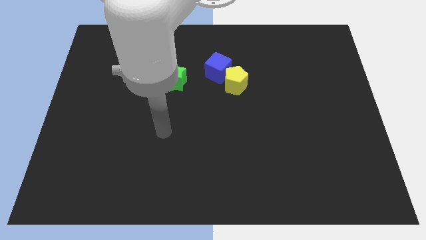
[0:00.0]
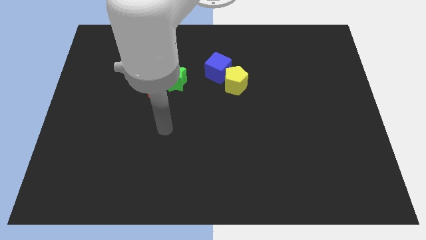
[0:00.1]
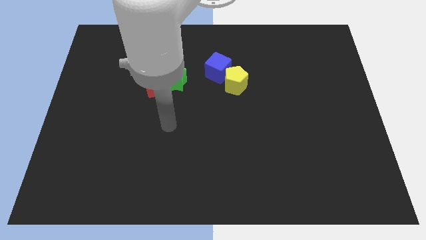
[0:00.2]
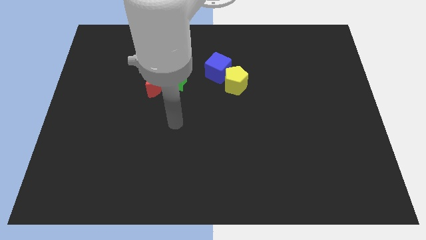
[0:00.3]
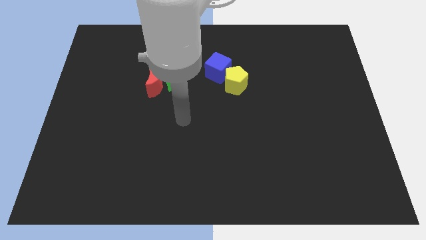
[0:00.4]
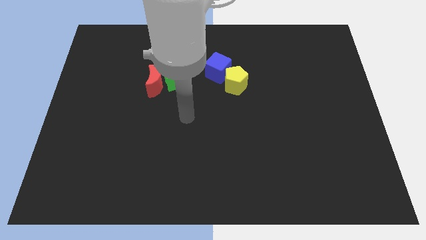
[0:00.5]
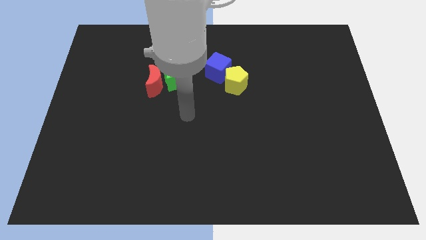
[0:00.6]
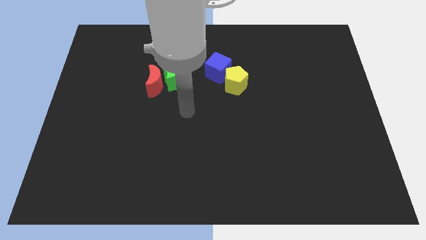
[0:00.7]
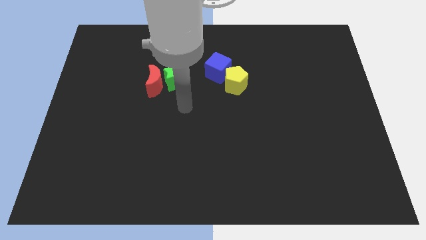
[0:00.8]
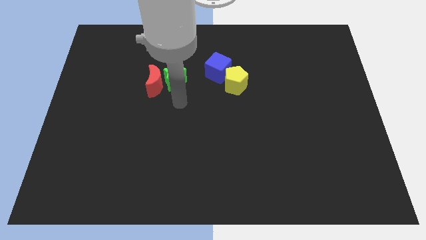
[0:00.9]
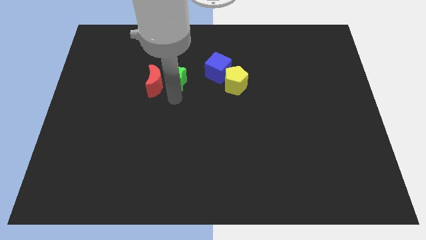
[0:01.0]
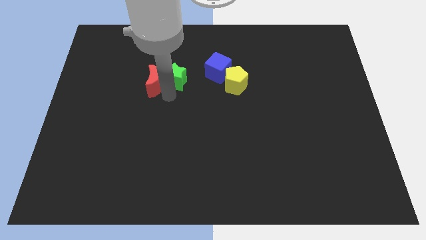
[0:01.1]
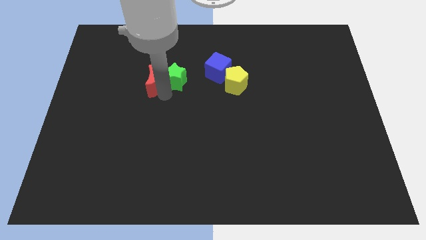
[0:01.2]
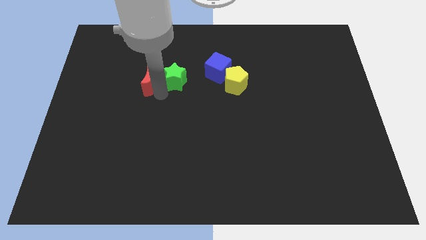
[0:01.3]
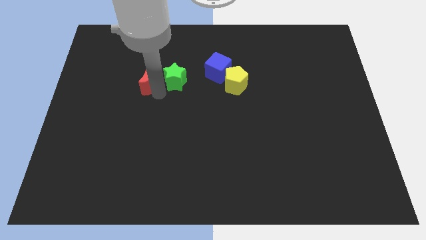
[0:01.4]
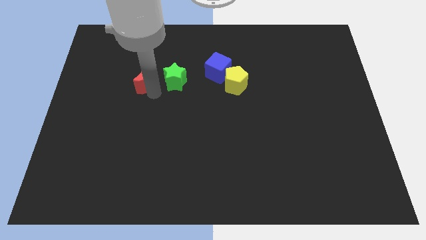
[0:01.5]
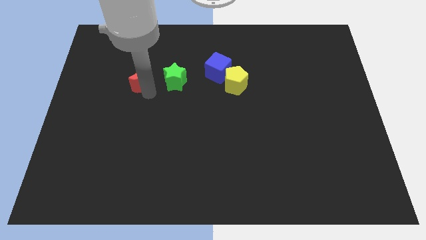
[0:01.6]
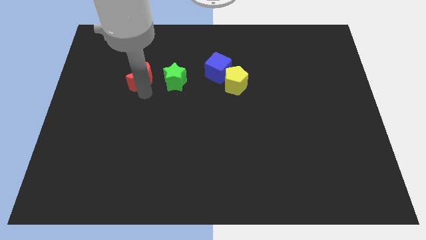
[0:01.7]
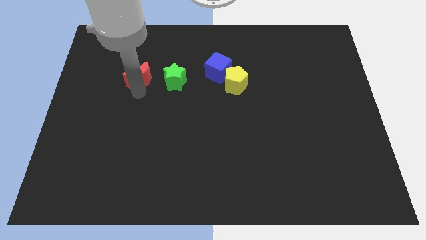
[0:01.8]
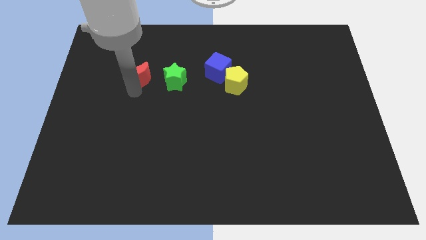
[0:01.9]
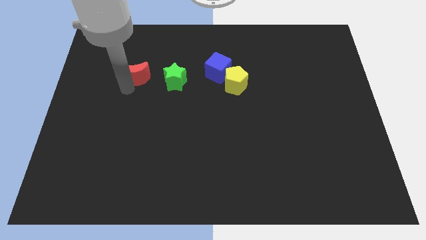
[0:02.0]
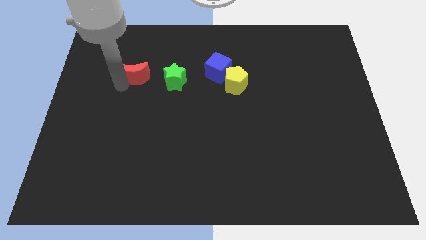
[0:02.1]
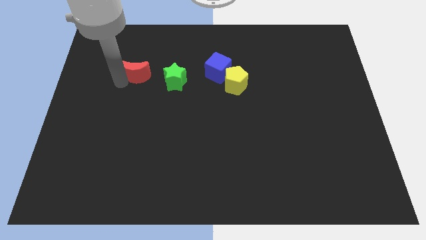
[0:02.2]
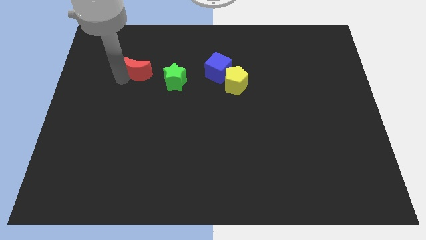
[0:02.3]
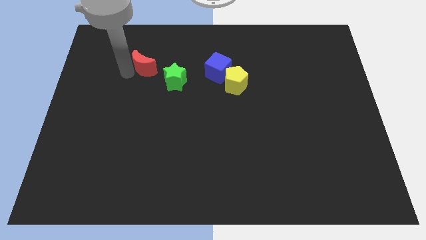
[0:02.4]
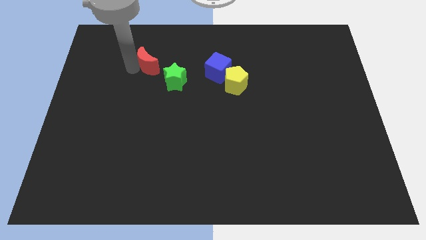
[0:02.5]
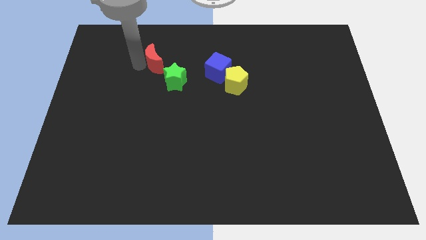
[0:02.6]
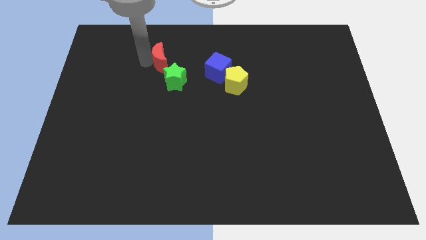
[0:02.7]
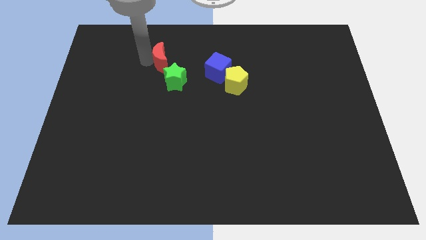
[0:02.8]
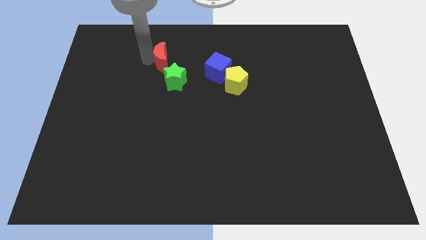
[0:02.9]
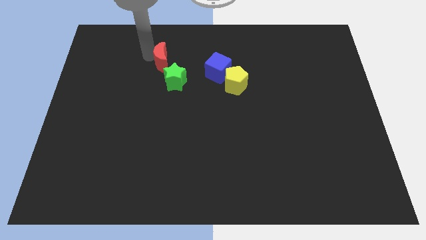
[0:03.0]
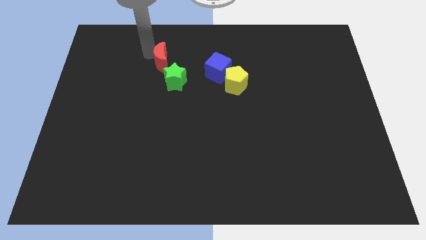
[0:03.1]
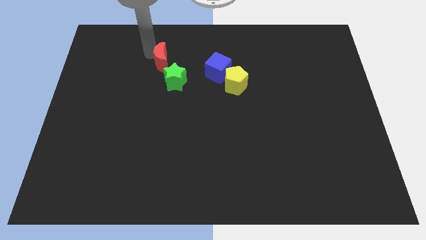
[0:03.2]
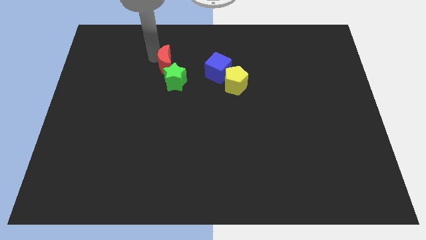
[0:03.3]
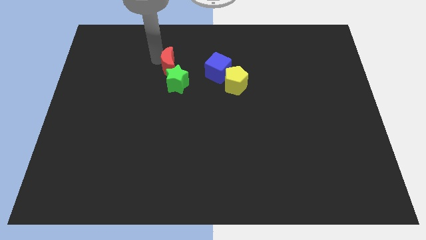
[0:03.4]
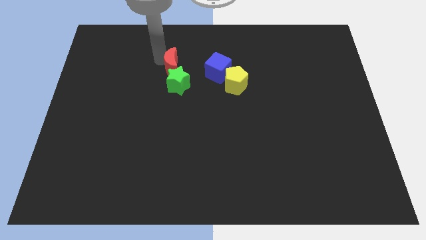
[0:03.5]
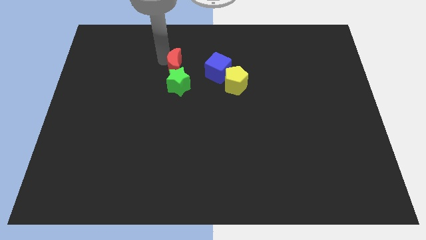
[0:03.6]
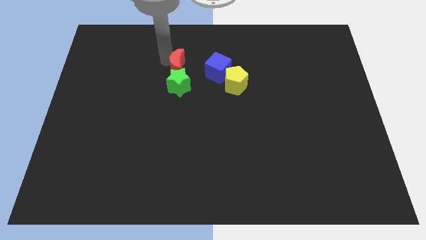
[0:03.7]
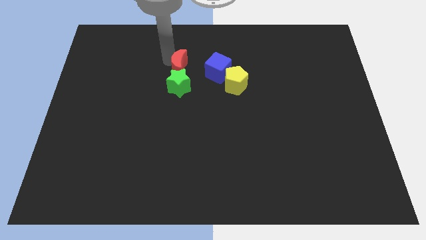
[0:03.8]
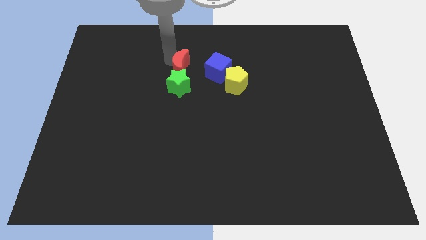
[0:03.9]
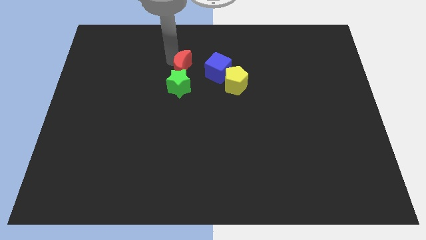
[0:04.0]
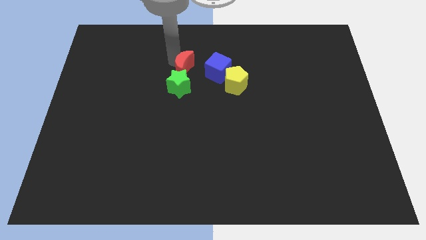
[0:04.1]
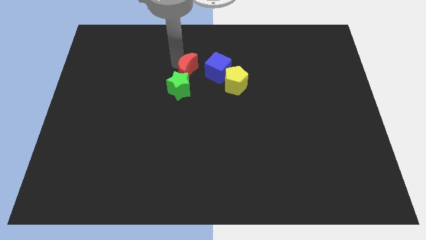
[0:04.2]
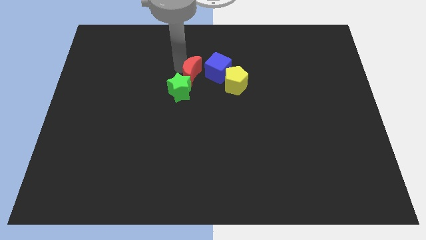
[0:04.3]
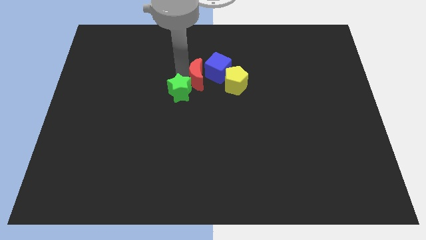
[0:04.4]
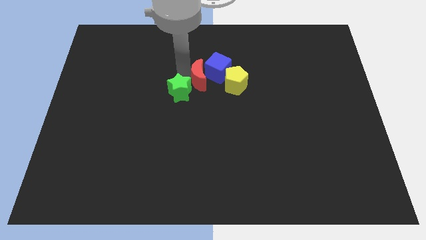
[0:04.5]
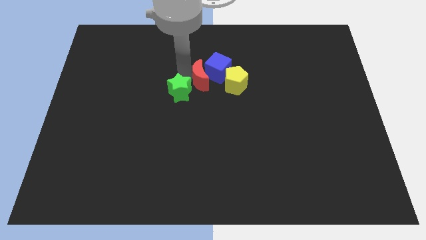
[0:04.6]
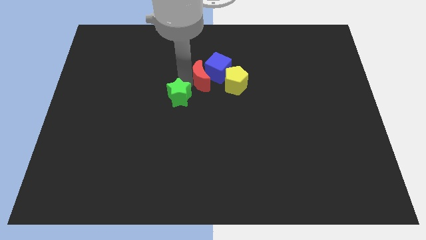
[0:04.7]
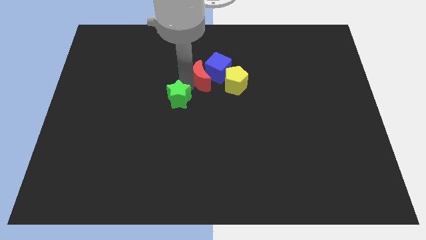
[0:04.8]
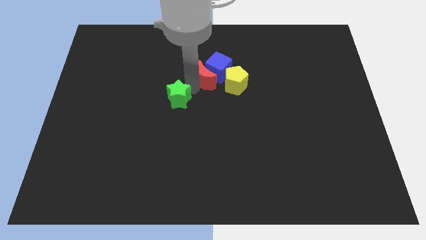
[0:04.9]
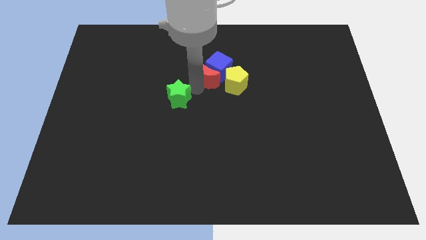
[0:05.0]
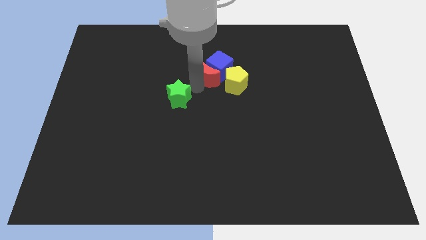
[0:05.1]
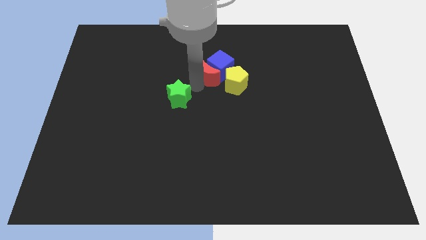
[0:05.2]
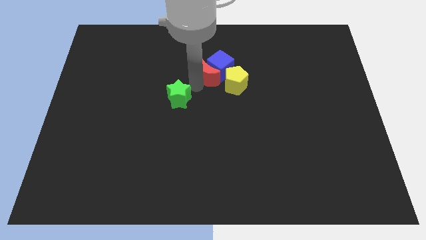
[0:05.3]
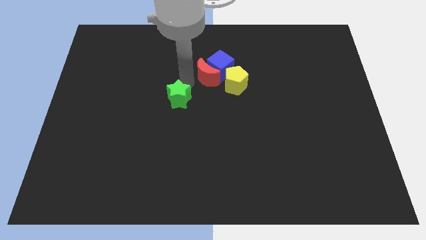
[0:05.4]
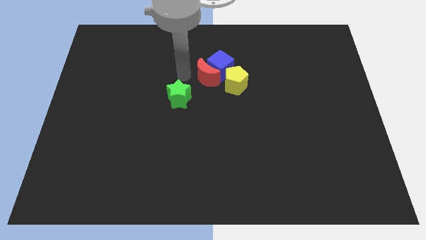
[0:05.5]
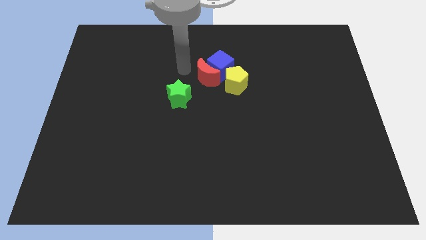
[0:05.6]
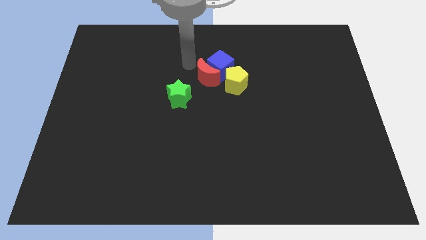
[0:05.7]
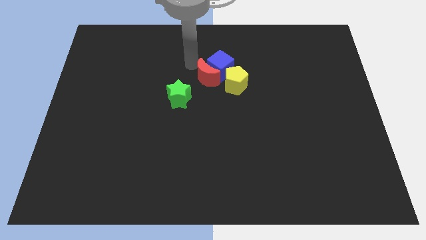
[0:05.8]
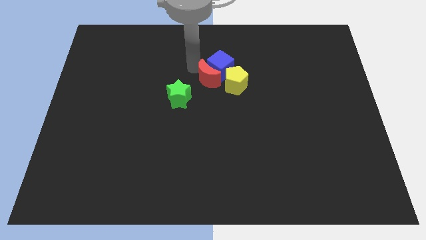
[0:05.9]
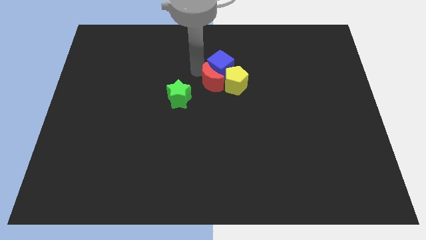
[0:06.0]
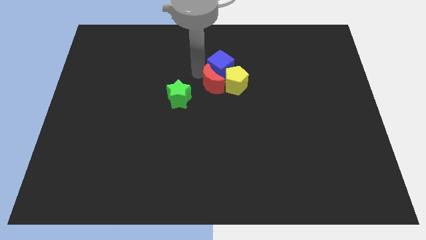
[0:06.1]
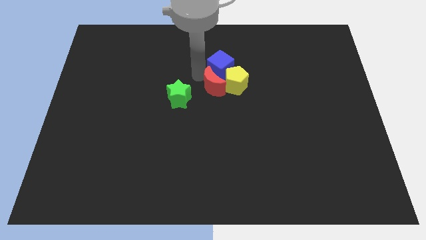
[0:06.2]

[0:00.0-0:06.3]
put the moon towards the yellow pentagon

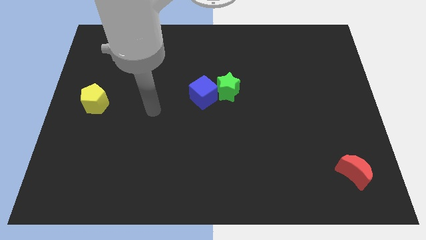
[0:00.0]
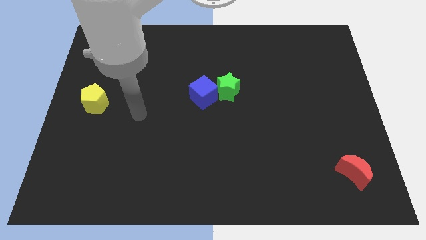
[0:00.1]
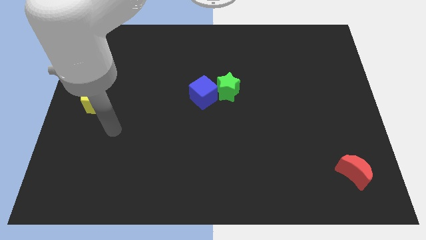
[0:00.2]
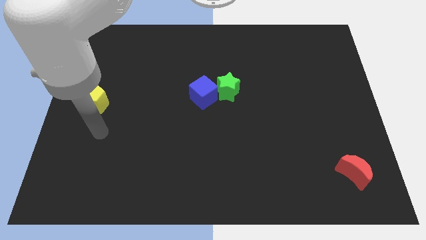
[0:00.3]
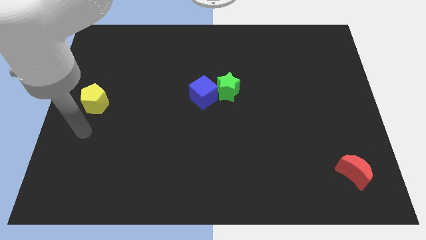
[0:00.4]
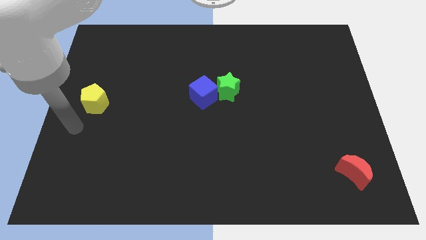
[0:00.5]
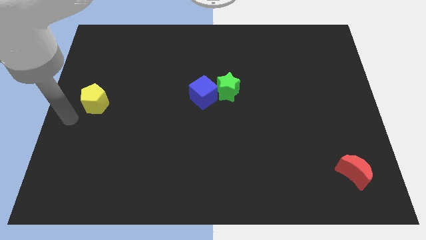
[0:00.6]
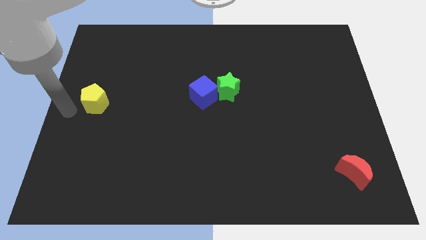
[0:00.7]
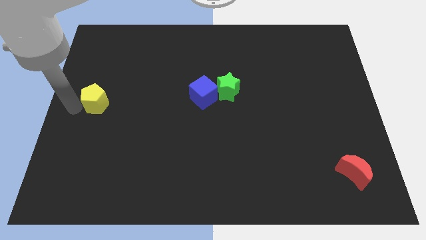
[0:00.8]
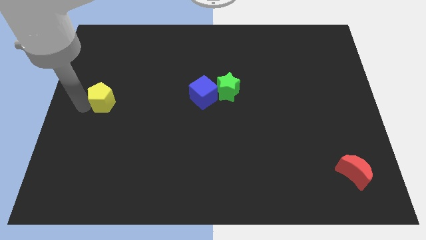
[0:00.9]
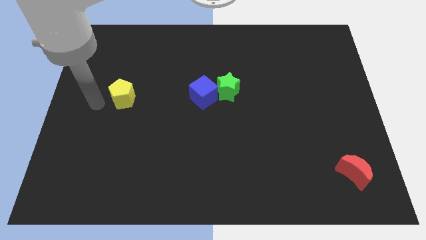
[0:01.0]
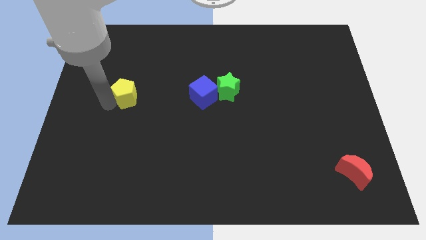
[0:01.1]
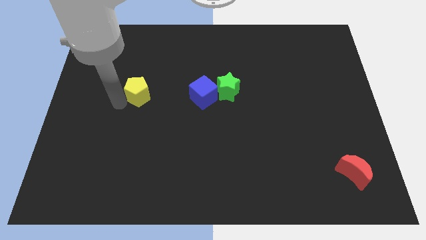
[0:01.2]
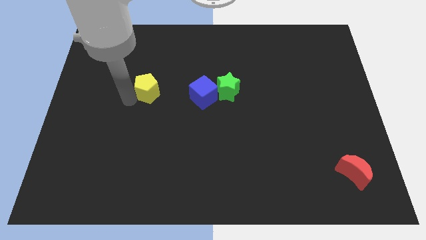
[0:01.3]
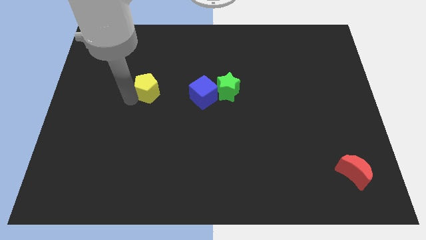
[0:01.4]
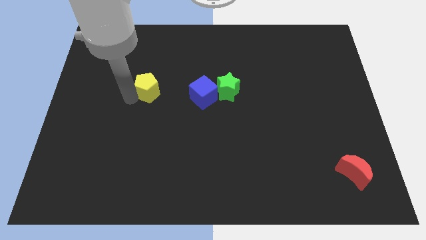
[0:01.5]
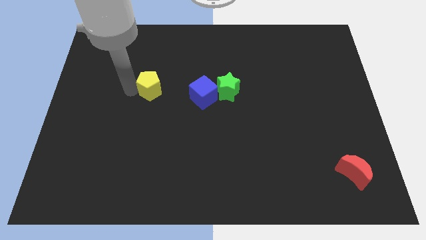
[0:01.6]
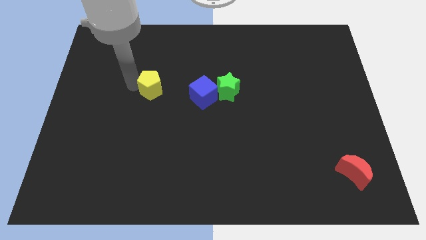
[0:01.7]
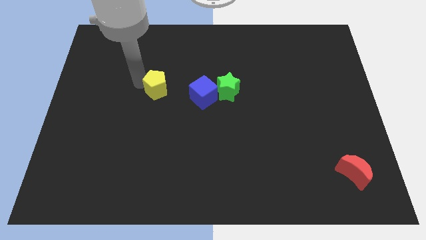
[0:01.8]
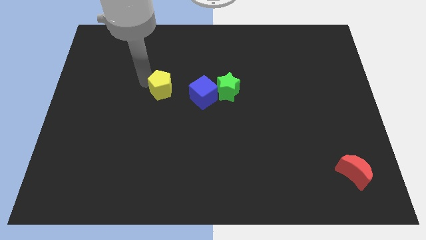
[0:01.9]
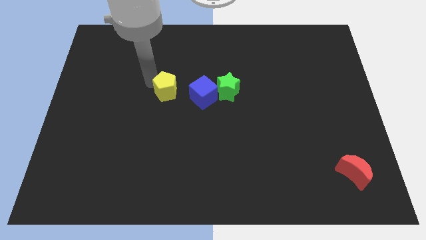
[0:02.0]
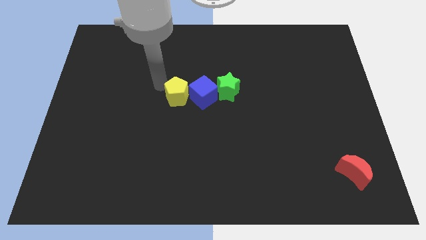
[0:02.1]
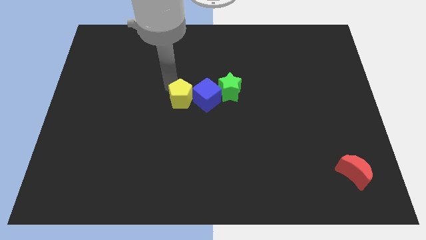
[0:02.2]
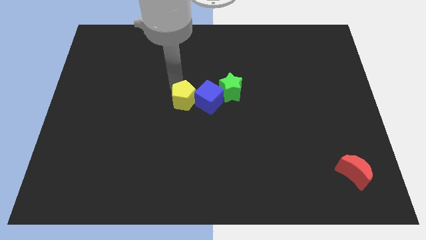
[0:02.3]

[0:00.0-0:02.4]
move the yellow block close to the cube
